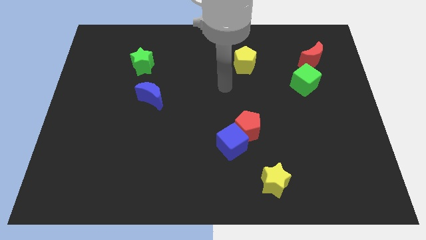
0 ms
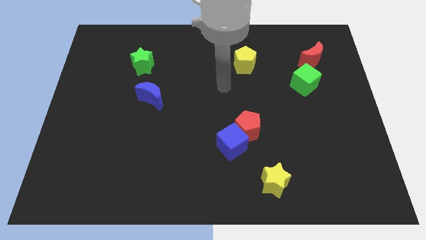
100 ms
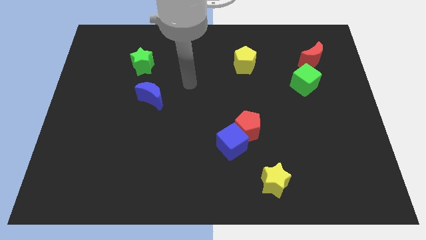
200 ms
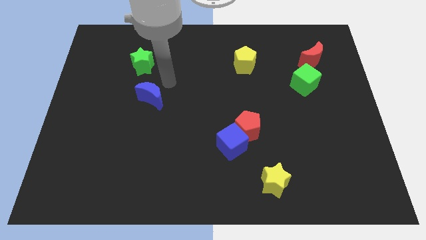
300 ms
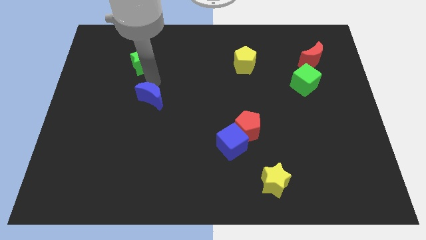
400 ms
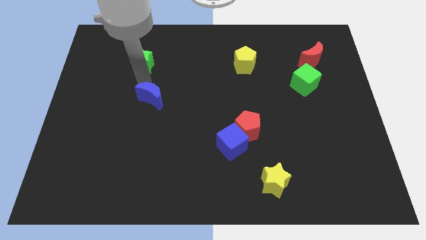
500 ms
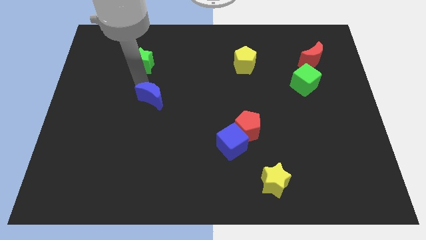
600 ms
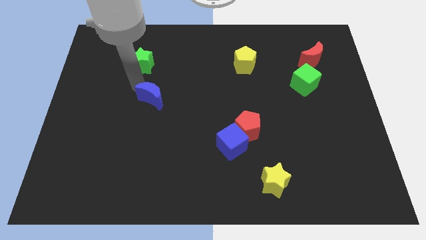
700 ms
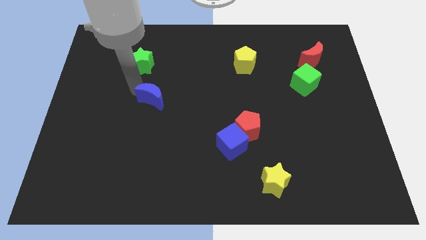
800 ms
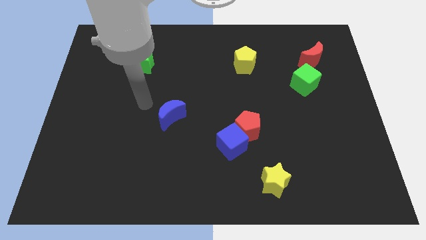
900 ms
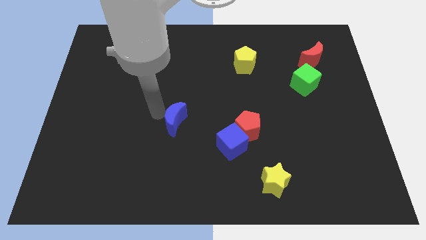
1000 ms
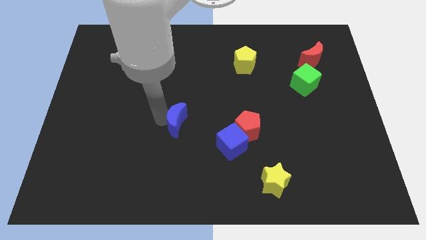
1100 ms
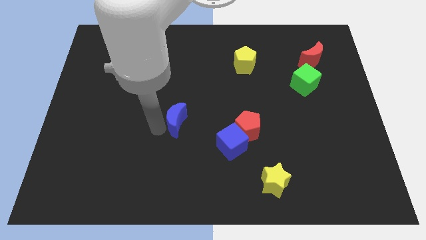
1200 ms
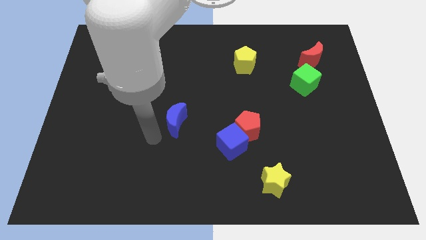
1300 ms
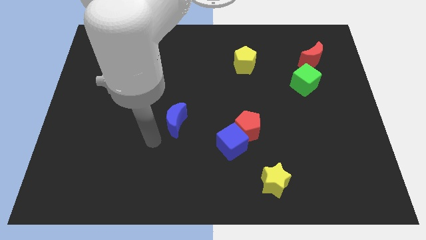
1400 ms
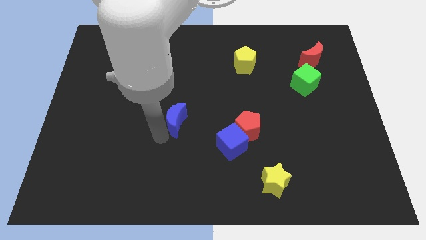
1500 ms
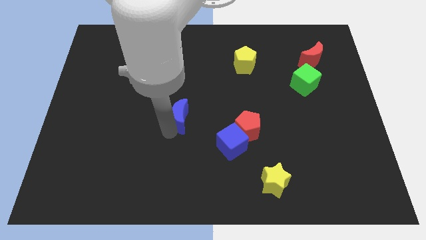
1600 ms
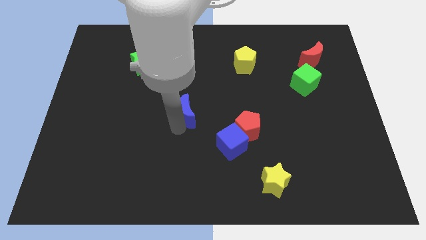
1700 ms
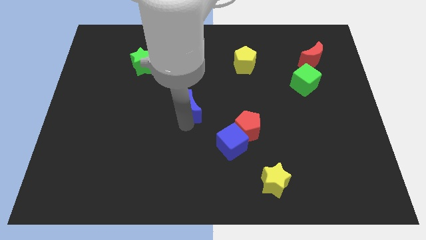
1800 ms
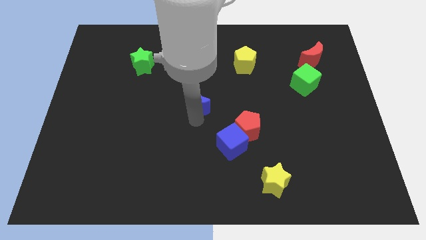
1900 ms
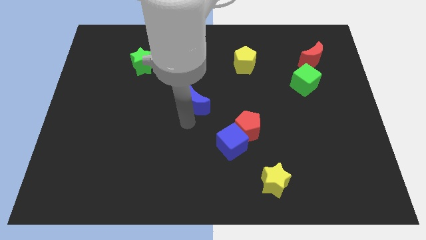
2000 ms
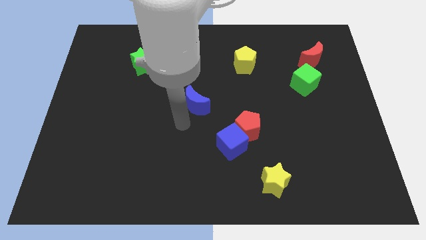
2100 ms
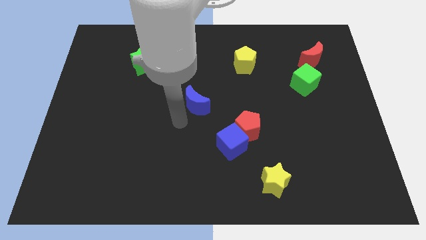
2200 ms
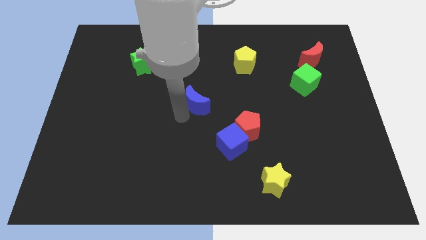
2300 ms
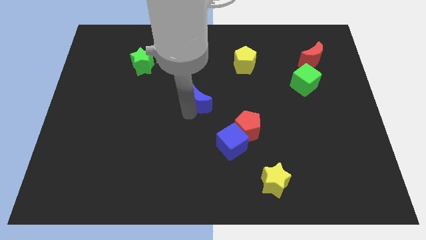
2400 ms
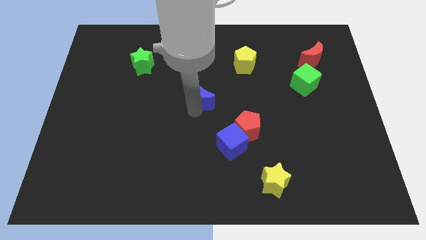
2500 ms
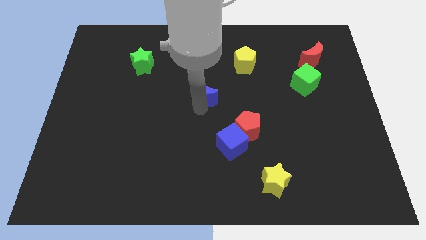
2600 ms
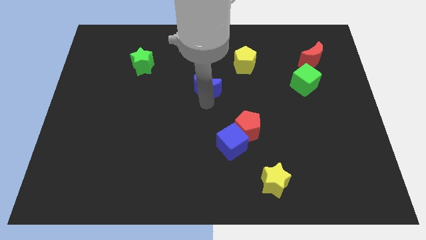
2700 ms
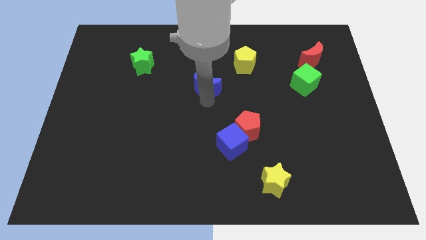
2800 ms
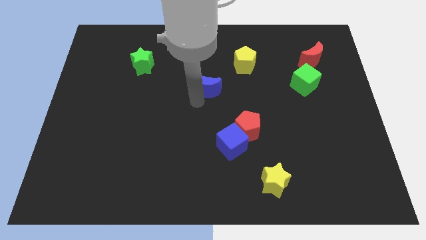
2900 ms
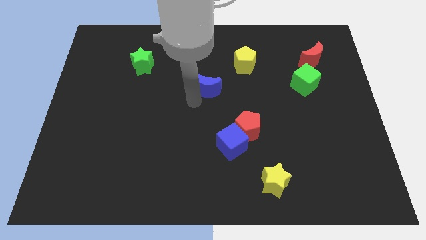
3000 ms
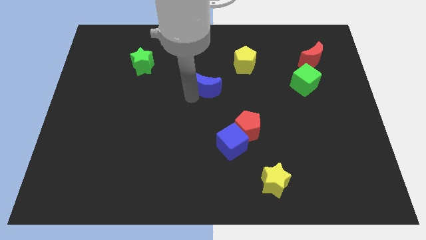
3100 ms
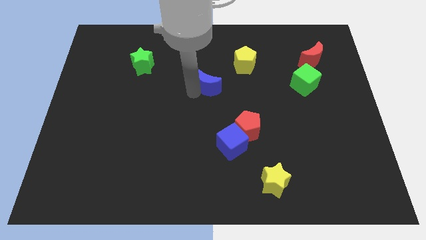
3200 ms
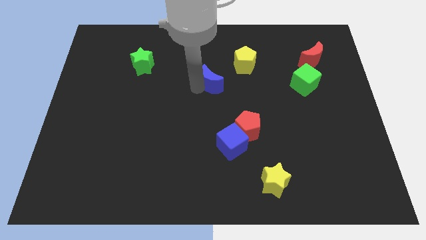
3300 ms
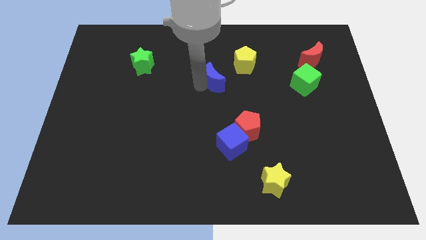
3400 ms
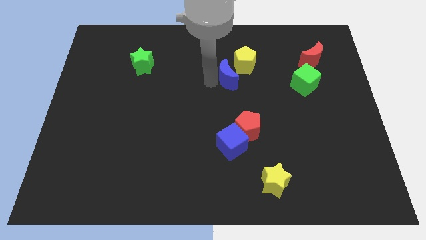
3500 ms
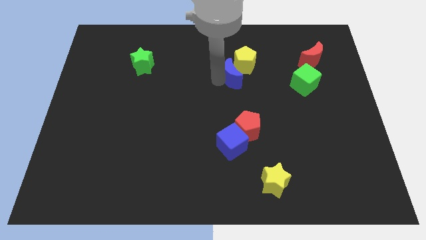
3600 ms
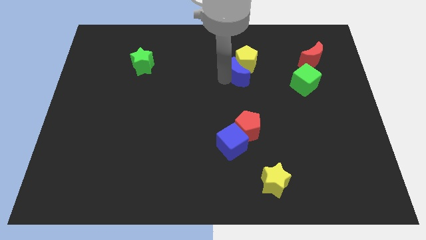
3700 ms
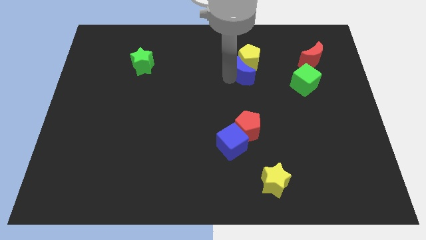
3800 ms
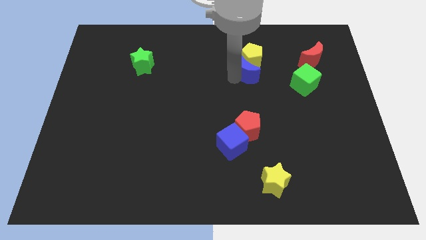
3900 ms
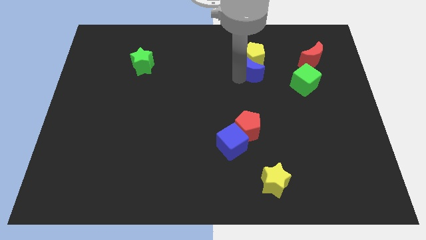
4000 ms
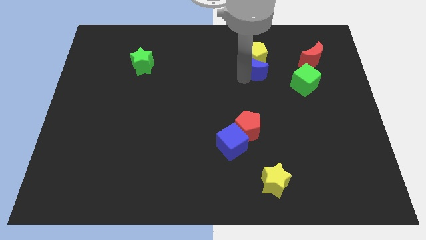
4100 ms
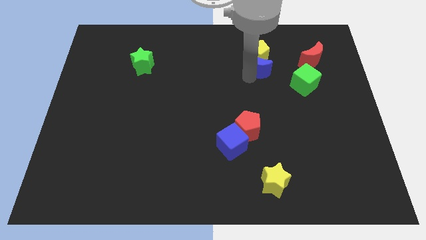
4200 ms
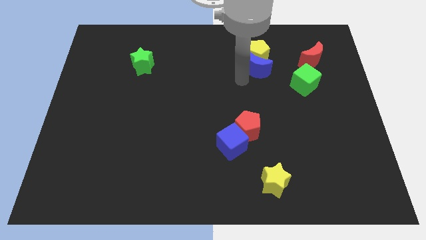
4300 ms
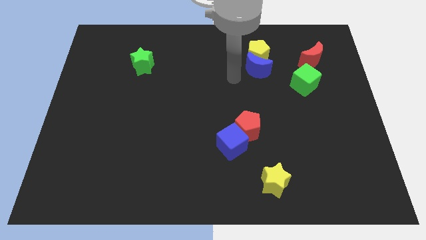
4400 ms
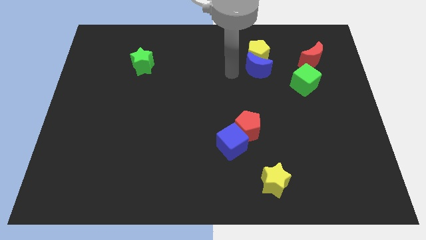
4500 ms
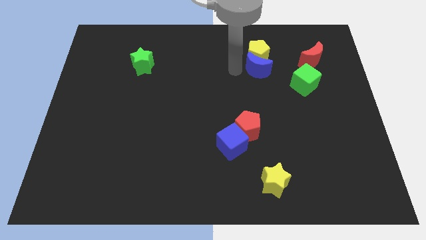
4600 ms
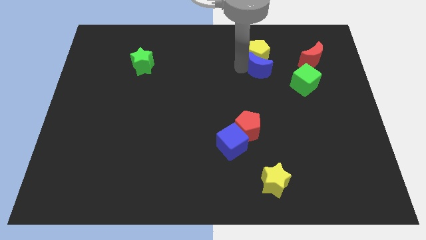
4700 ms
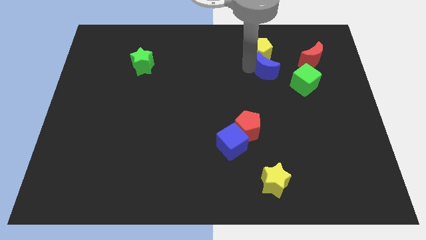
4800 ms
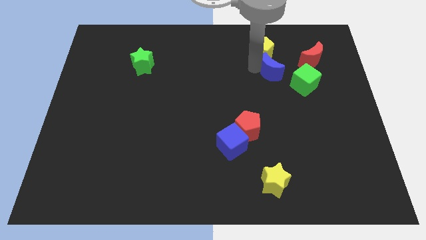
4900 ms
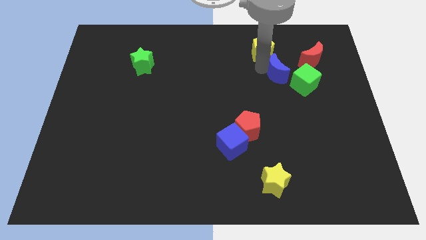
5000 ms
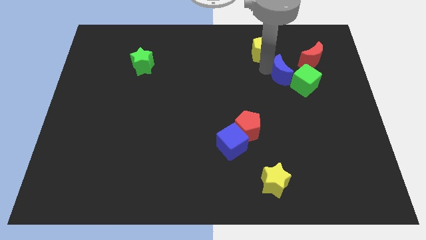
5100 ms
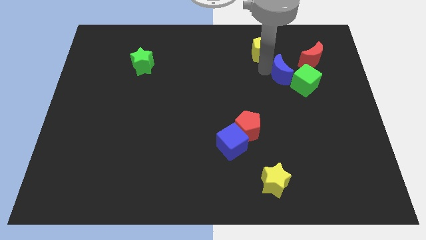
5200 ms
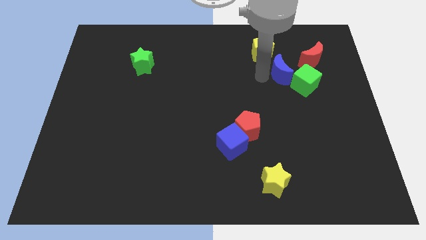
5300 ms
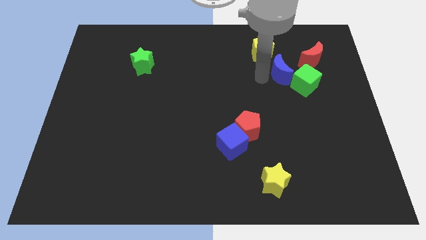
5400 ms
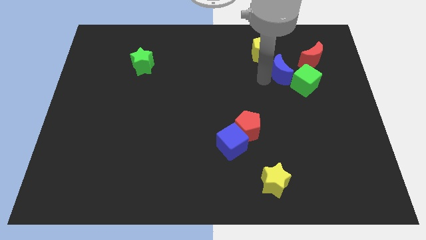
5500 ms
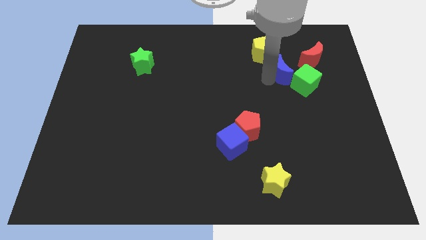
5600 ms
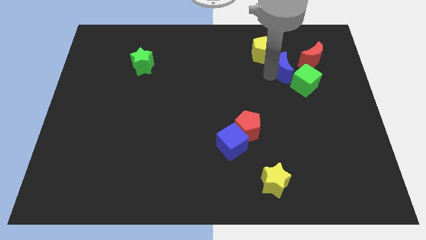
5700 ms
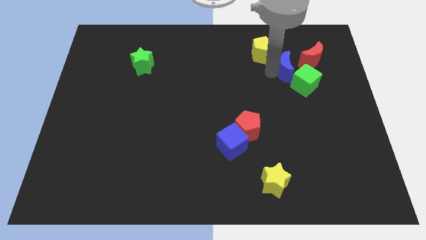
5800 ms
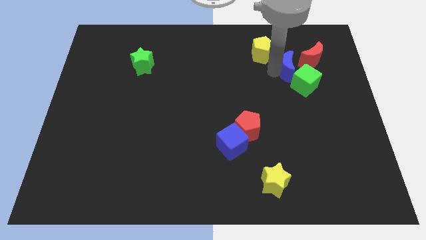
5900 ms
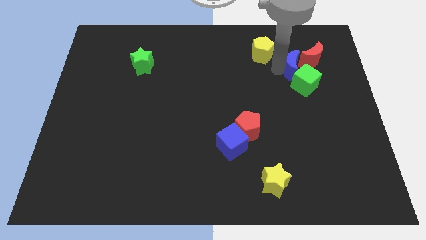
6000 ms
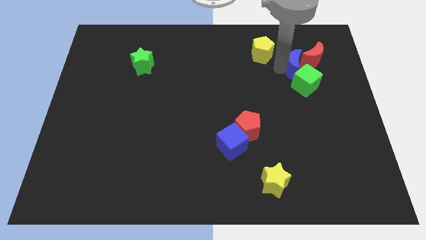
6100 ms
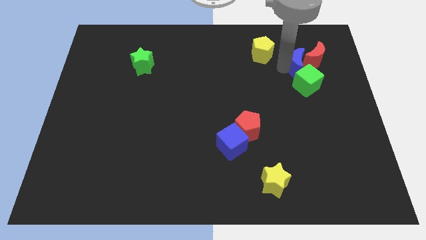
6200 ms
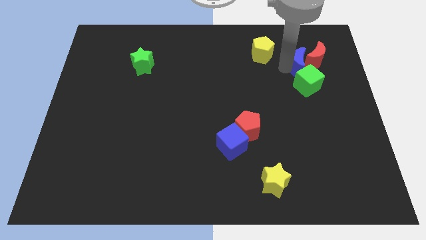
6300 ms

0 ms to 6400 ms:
push the blue moon next to the red moon

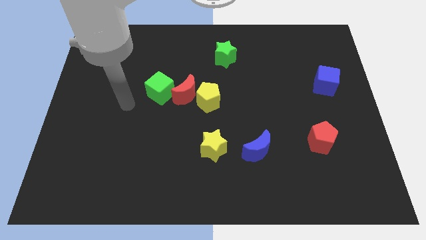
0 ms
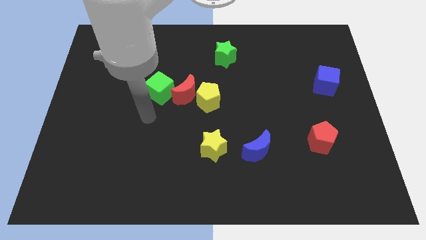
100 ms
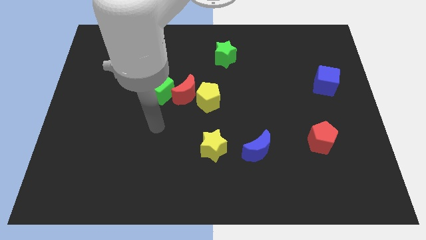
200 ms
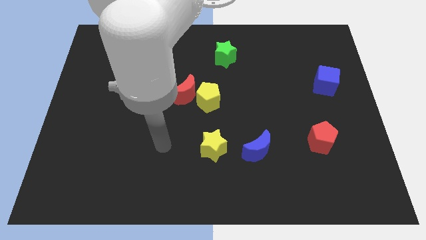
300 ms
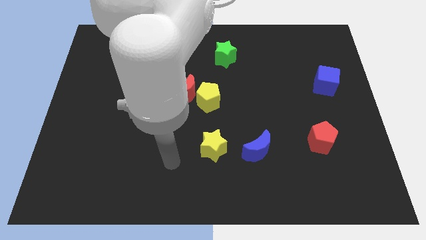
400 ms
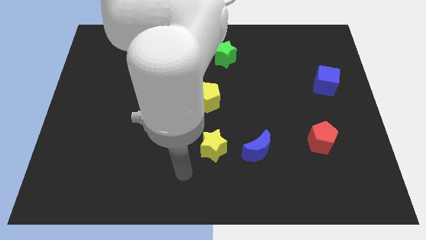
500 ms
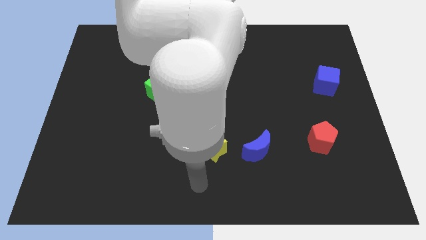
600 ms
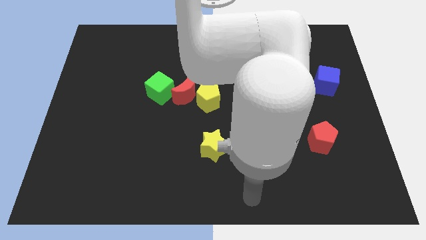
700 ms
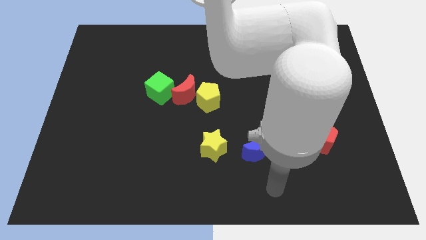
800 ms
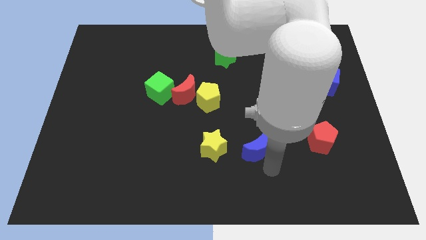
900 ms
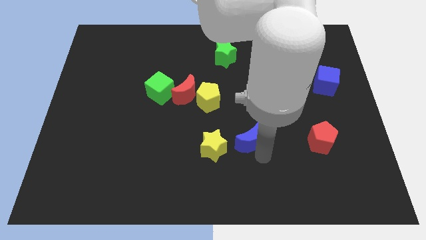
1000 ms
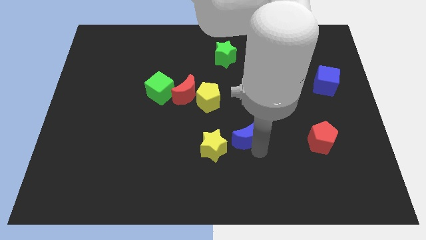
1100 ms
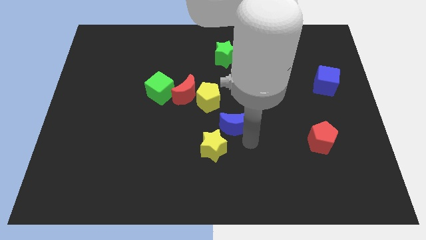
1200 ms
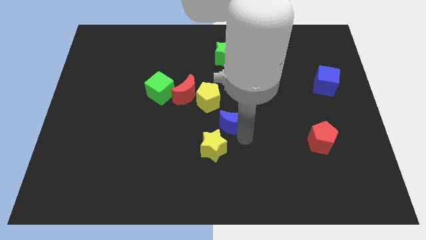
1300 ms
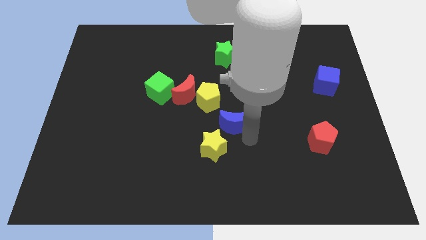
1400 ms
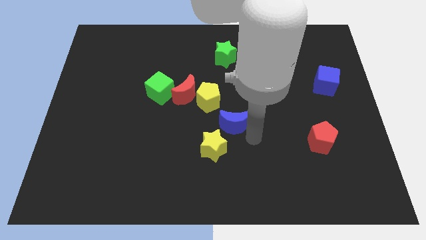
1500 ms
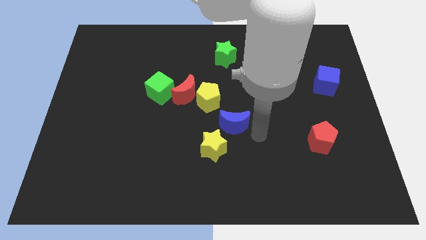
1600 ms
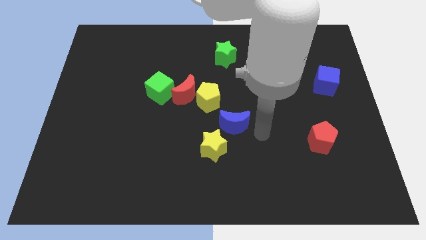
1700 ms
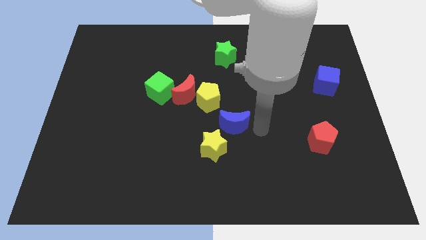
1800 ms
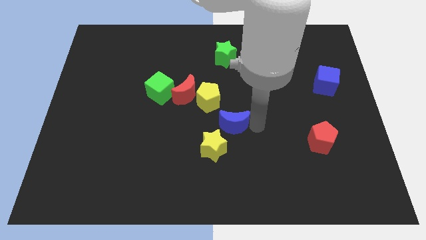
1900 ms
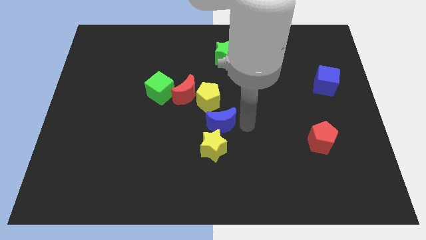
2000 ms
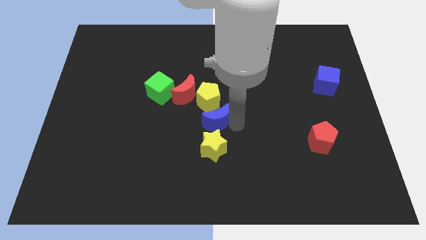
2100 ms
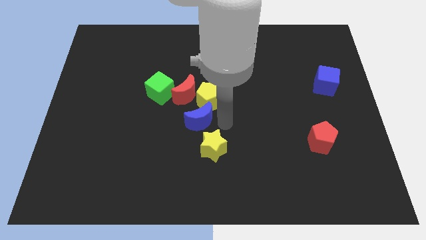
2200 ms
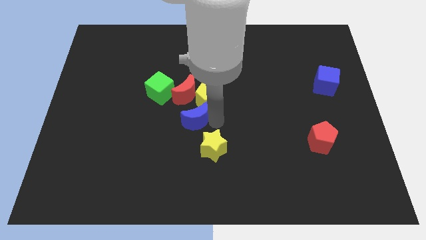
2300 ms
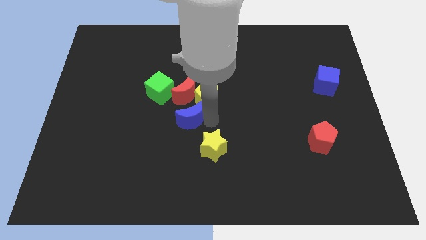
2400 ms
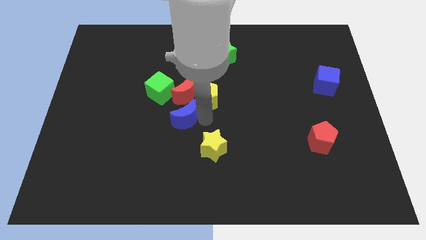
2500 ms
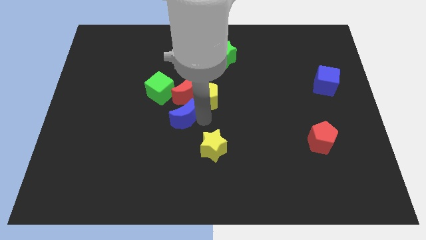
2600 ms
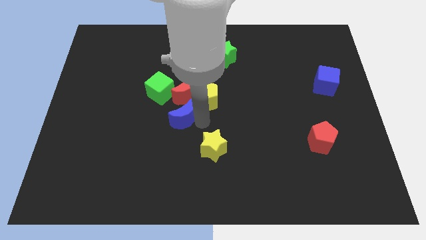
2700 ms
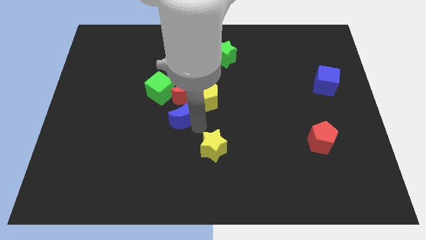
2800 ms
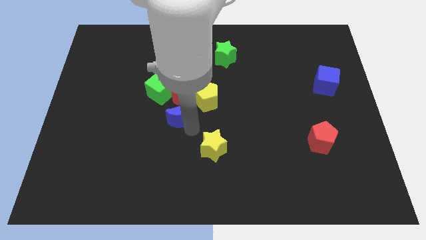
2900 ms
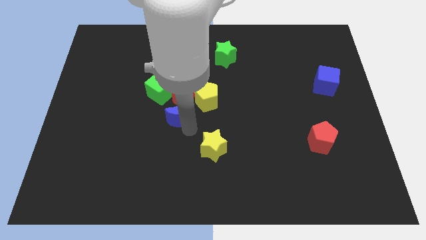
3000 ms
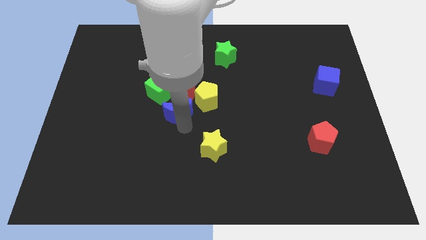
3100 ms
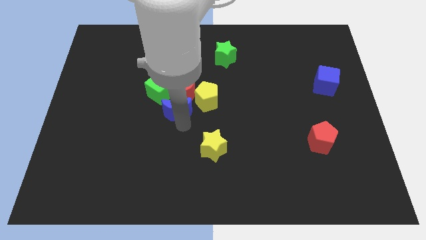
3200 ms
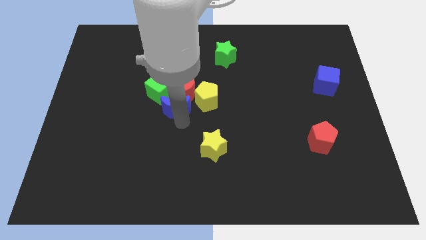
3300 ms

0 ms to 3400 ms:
put the blue moon to the red moon
